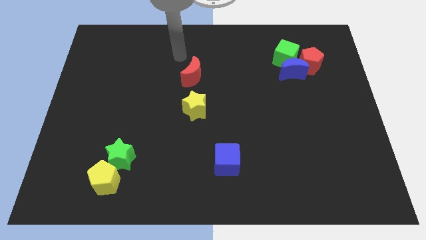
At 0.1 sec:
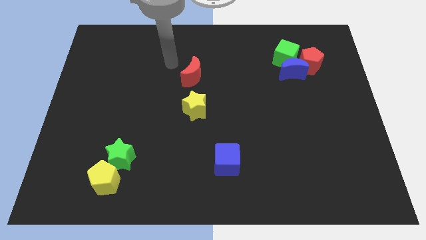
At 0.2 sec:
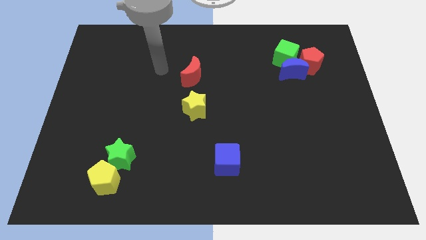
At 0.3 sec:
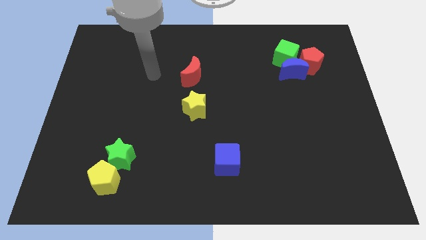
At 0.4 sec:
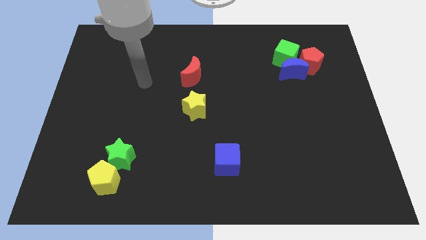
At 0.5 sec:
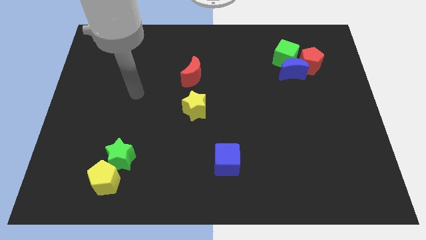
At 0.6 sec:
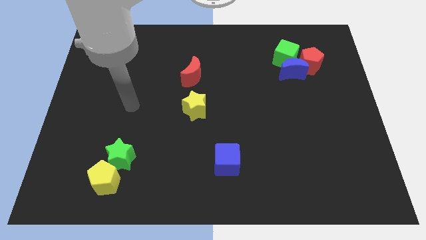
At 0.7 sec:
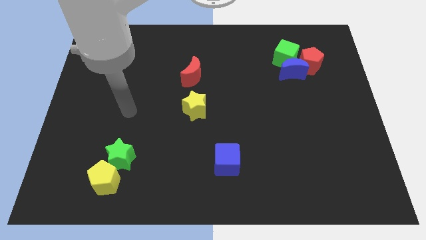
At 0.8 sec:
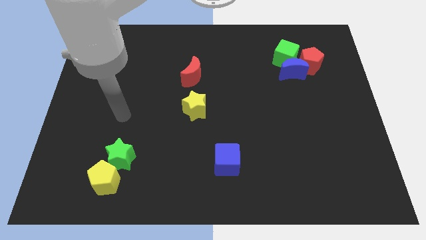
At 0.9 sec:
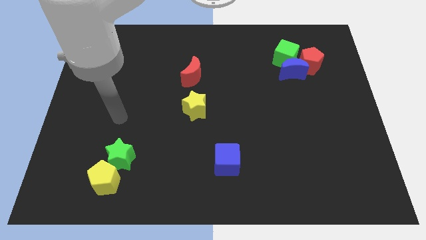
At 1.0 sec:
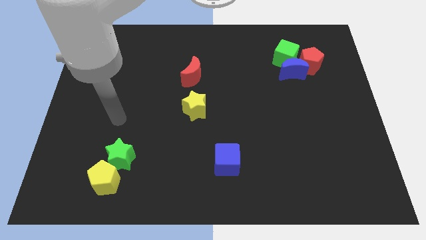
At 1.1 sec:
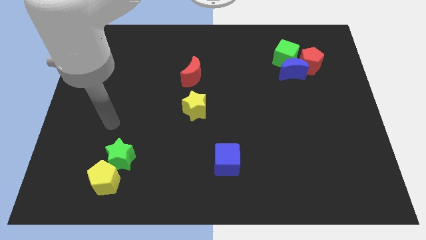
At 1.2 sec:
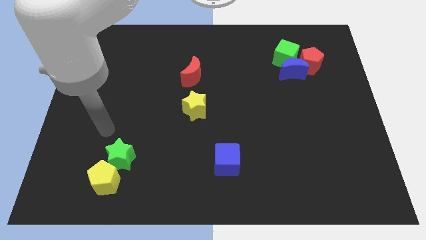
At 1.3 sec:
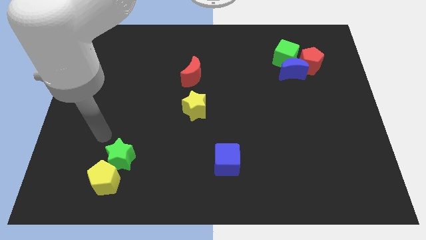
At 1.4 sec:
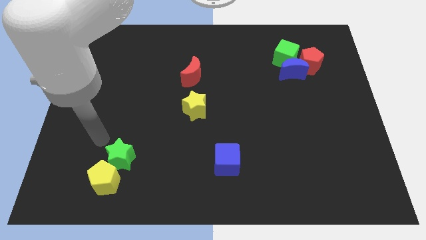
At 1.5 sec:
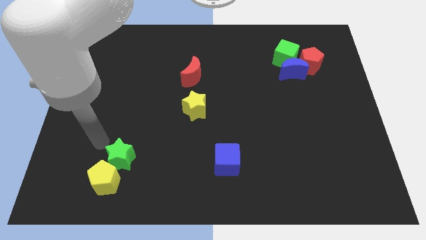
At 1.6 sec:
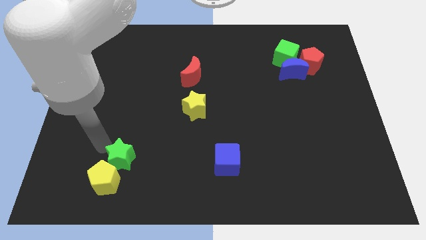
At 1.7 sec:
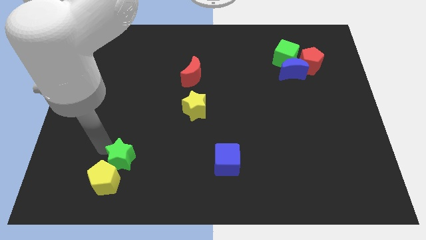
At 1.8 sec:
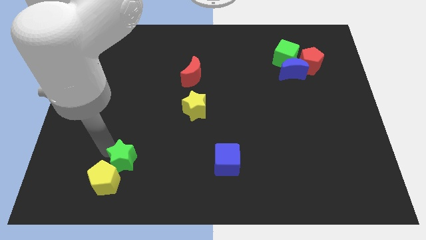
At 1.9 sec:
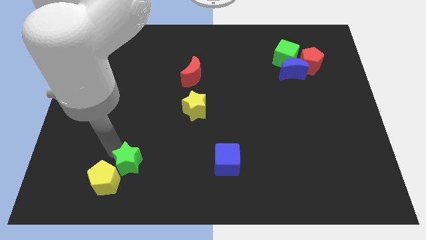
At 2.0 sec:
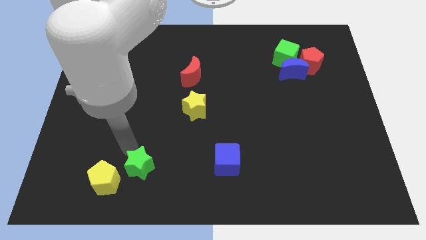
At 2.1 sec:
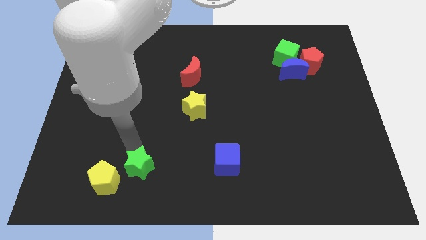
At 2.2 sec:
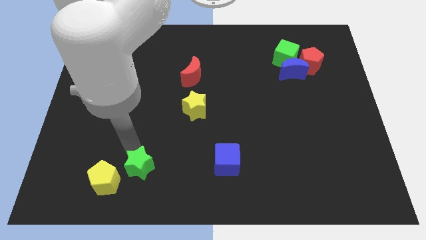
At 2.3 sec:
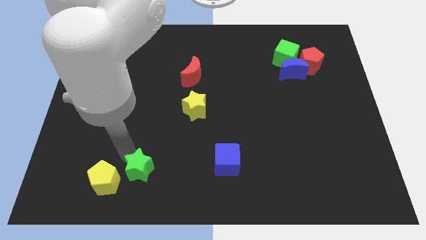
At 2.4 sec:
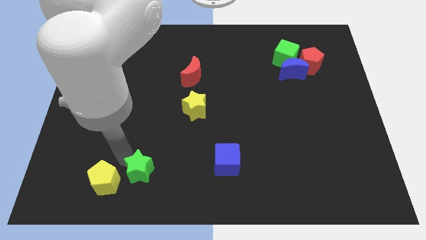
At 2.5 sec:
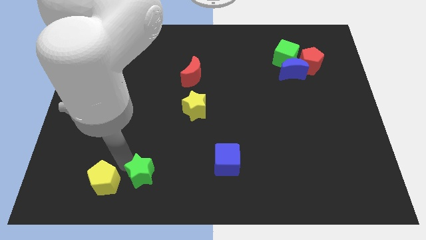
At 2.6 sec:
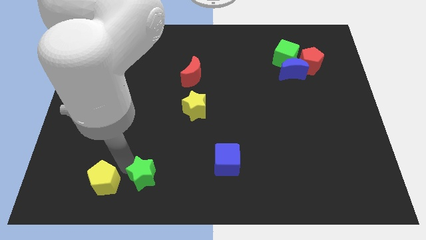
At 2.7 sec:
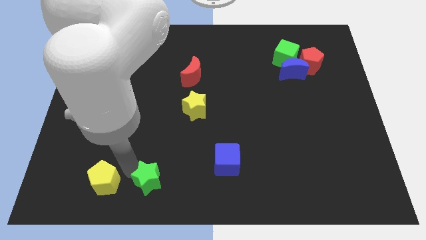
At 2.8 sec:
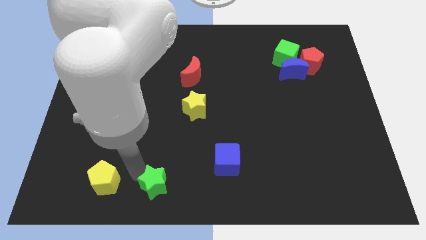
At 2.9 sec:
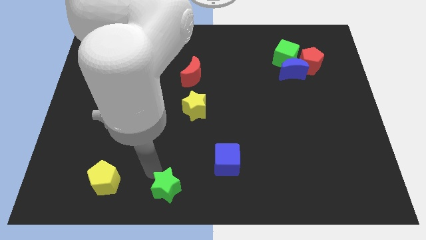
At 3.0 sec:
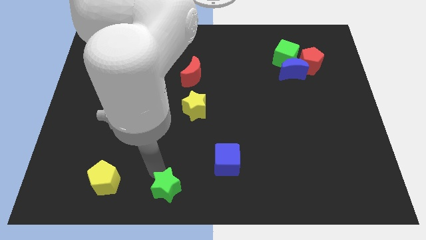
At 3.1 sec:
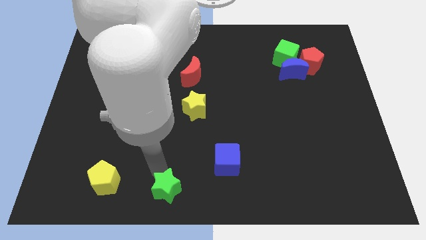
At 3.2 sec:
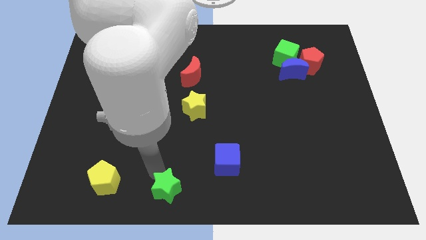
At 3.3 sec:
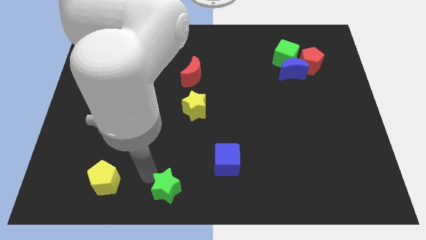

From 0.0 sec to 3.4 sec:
move your arm towards the green star

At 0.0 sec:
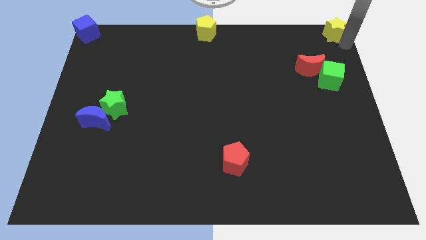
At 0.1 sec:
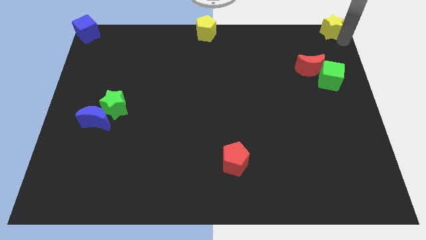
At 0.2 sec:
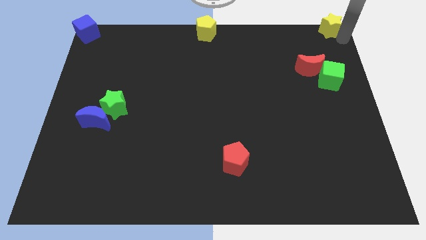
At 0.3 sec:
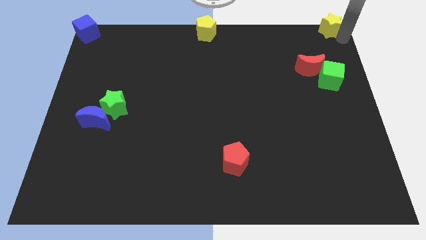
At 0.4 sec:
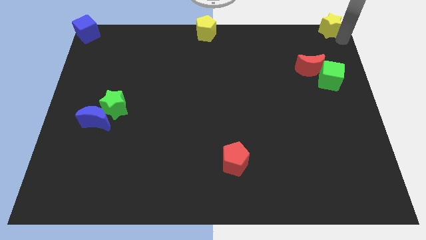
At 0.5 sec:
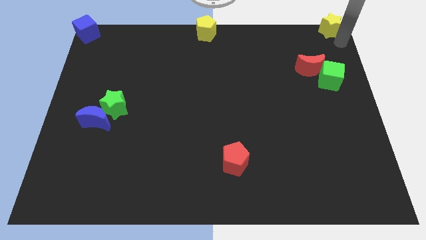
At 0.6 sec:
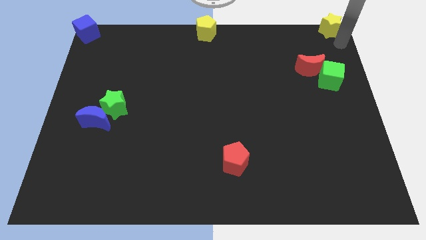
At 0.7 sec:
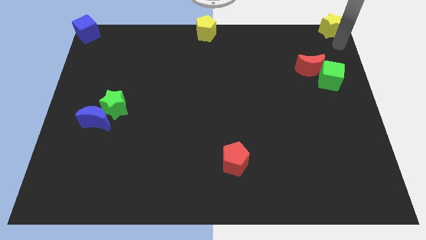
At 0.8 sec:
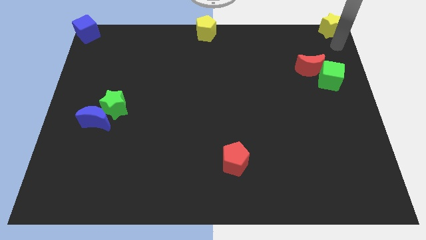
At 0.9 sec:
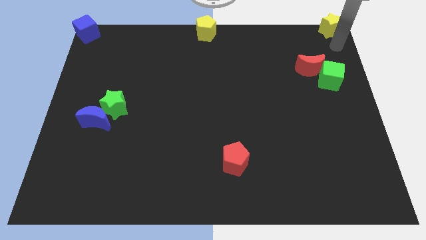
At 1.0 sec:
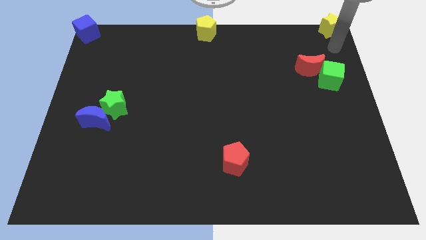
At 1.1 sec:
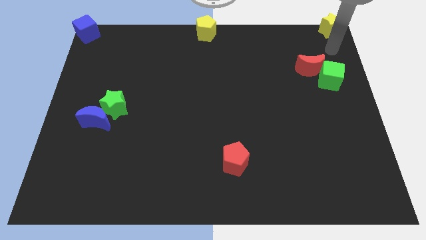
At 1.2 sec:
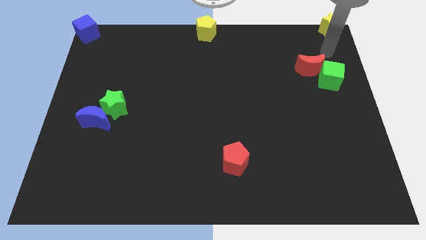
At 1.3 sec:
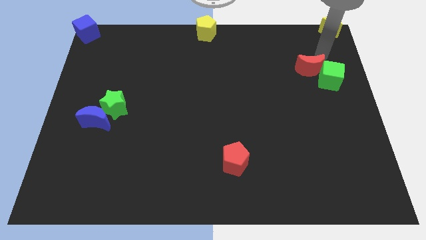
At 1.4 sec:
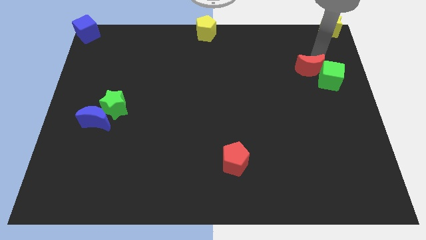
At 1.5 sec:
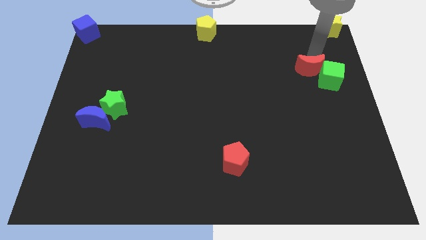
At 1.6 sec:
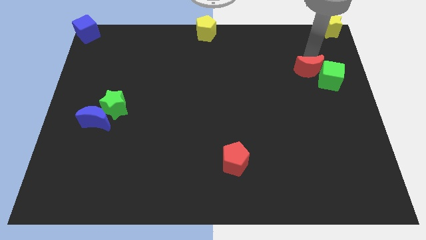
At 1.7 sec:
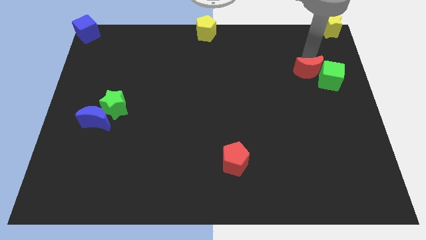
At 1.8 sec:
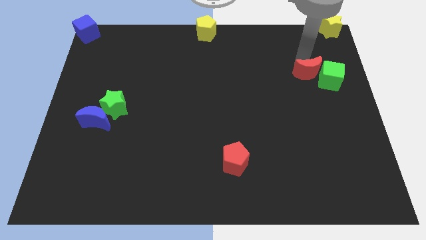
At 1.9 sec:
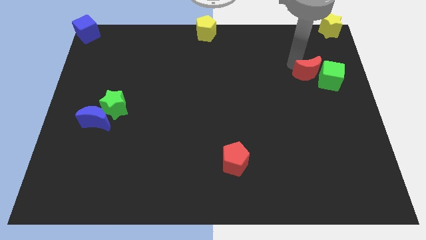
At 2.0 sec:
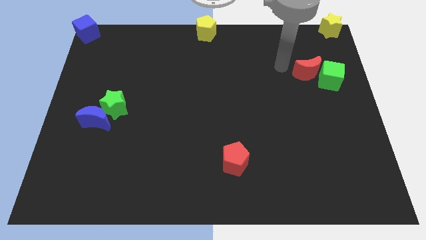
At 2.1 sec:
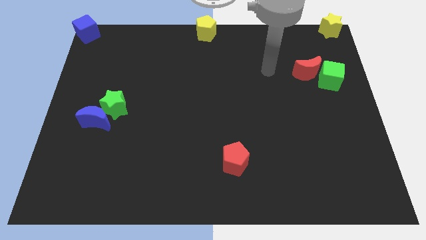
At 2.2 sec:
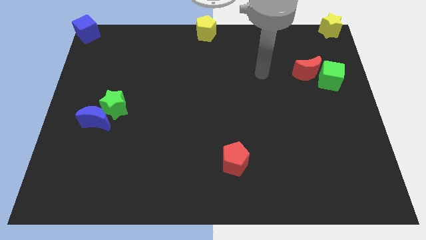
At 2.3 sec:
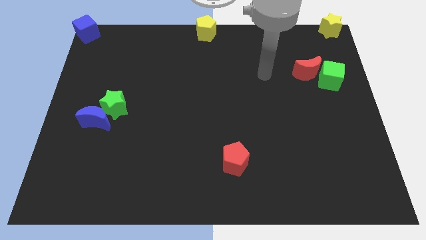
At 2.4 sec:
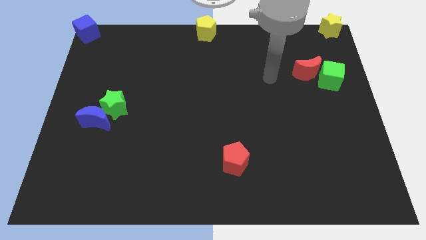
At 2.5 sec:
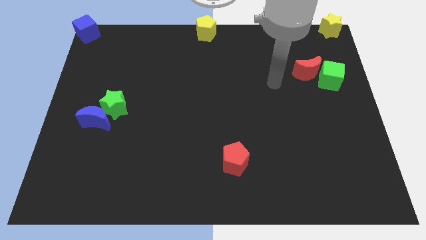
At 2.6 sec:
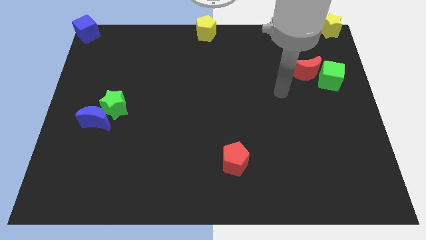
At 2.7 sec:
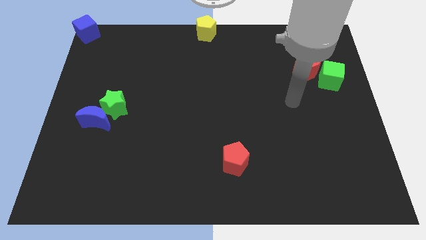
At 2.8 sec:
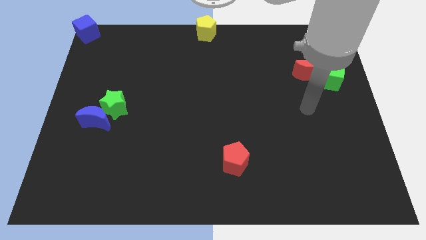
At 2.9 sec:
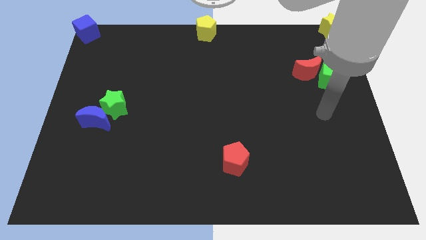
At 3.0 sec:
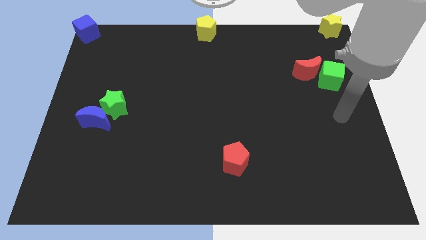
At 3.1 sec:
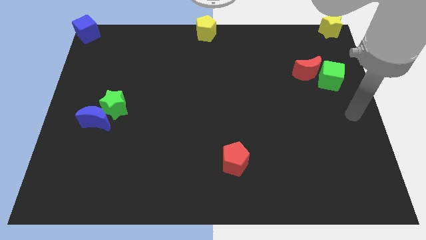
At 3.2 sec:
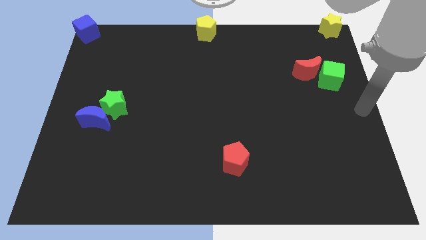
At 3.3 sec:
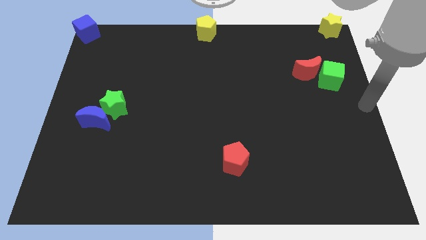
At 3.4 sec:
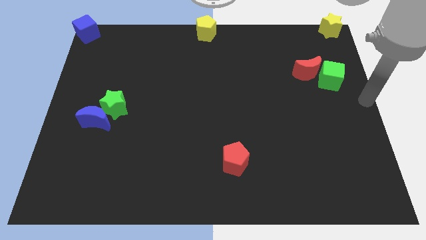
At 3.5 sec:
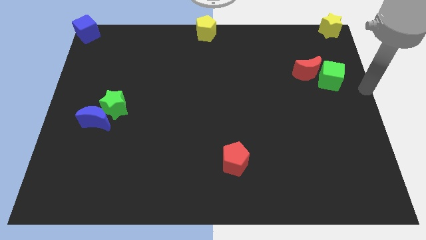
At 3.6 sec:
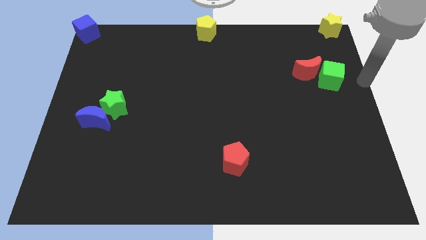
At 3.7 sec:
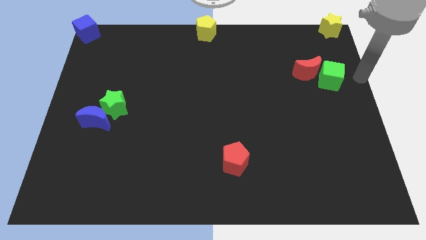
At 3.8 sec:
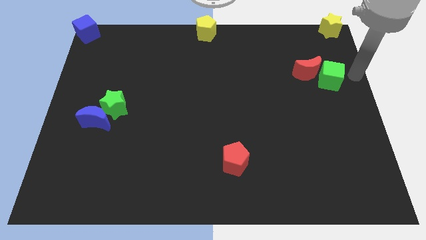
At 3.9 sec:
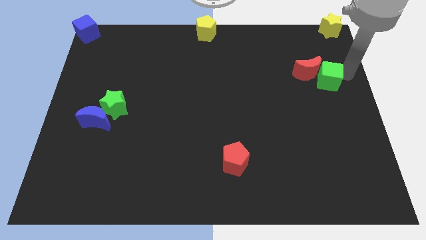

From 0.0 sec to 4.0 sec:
slightly push the red moon downwards

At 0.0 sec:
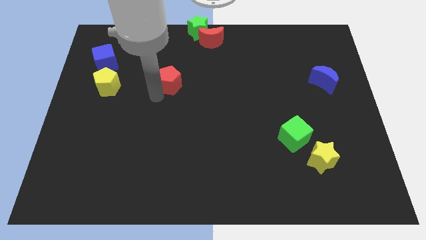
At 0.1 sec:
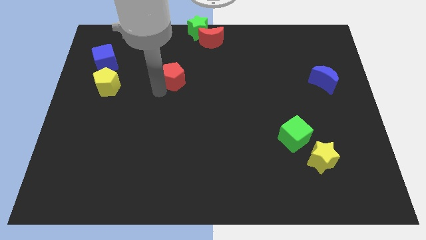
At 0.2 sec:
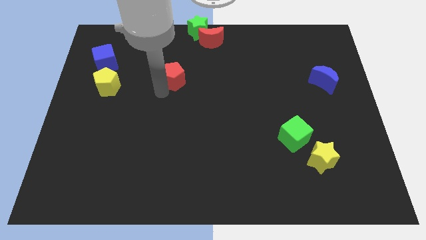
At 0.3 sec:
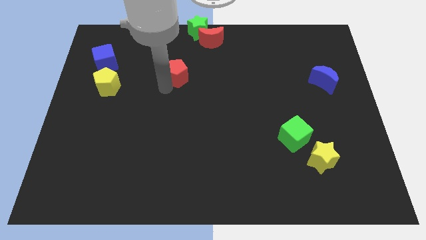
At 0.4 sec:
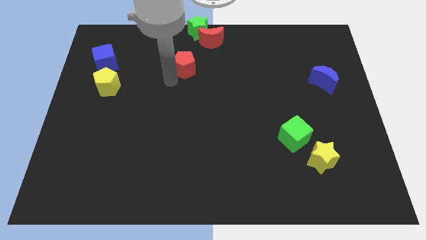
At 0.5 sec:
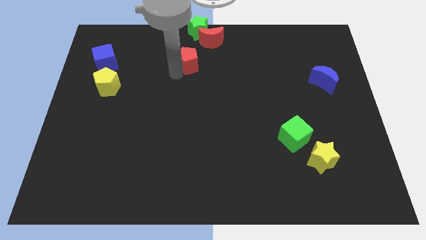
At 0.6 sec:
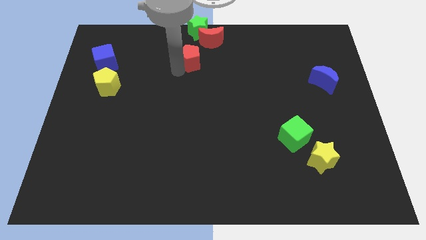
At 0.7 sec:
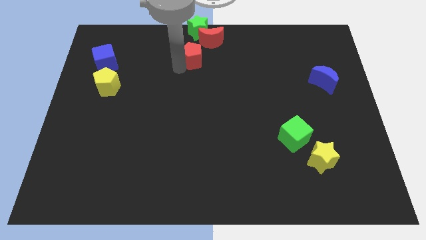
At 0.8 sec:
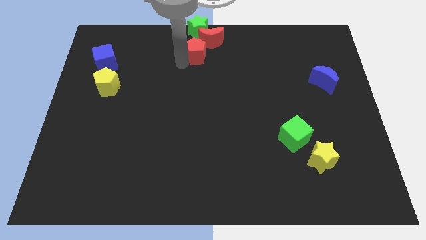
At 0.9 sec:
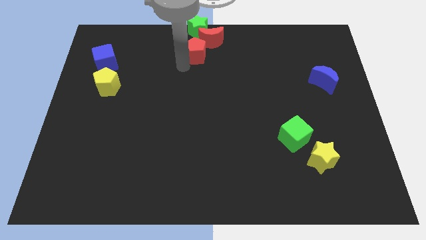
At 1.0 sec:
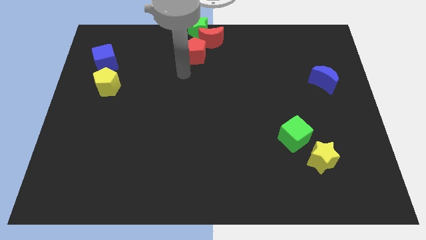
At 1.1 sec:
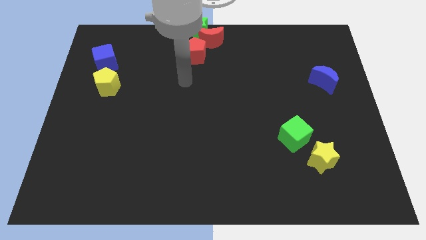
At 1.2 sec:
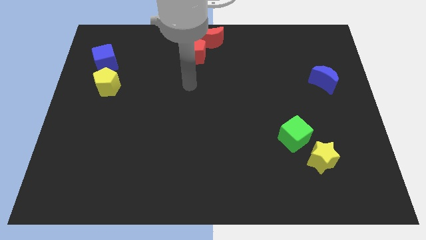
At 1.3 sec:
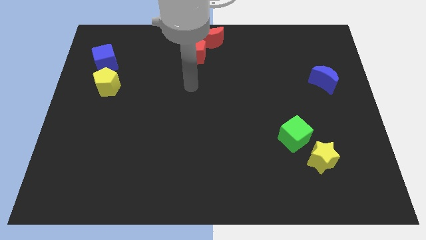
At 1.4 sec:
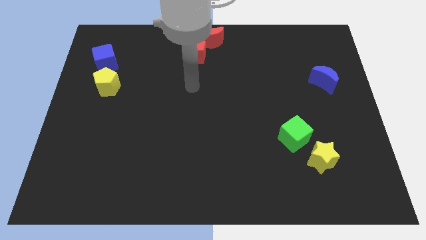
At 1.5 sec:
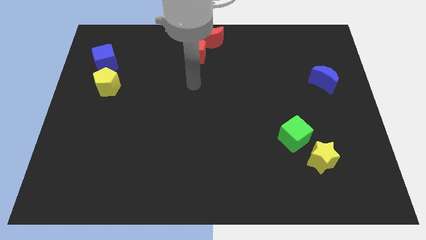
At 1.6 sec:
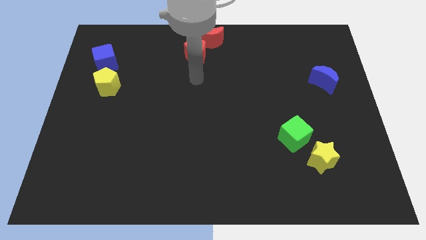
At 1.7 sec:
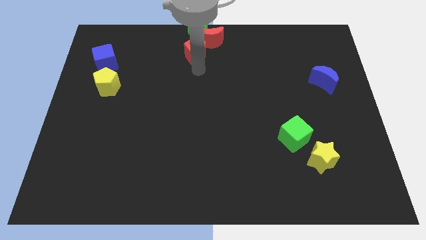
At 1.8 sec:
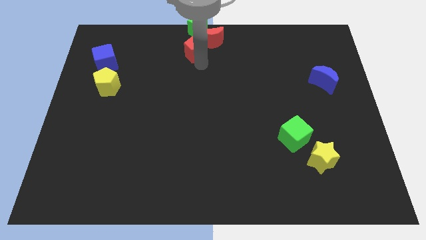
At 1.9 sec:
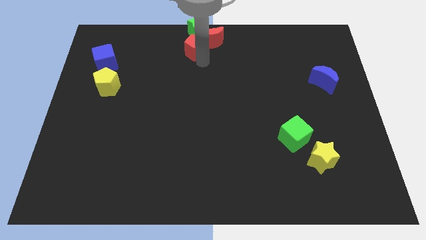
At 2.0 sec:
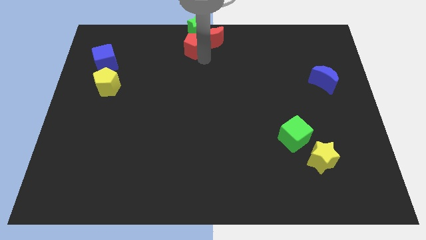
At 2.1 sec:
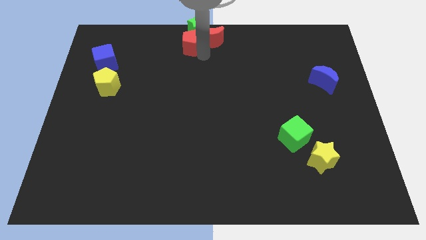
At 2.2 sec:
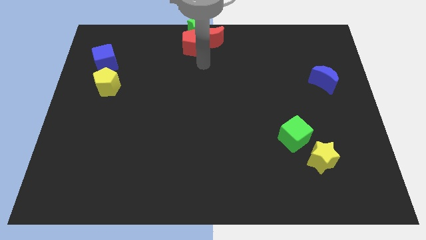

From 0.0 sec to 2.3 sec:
move the red pentagon into the green star
